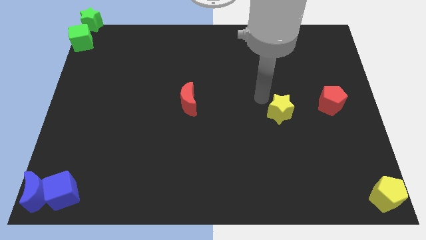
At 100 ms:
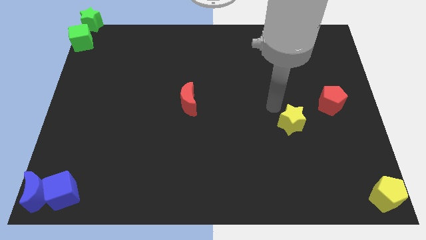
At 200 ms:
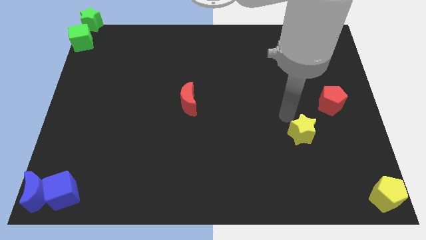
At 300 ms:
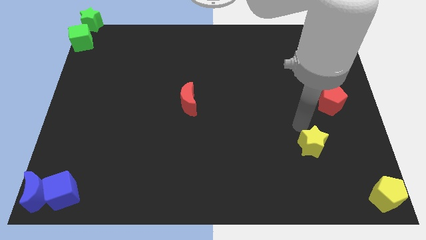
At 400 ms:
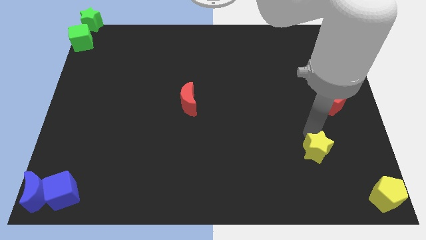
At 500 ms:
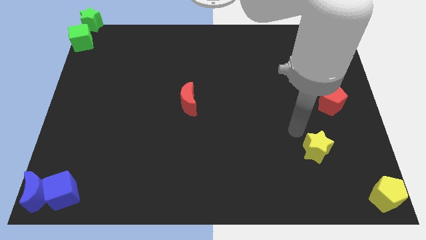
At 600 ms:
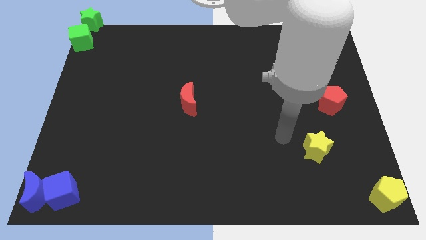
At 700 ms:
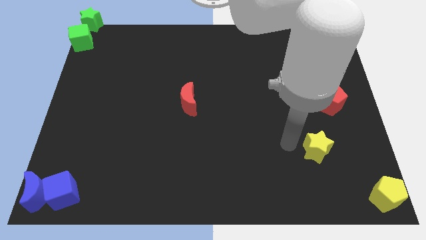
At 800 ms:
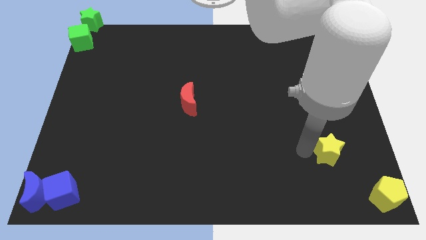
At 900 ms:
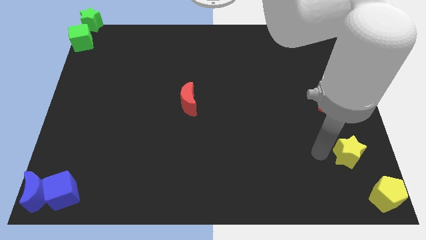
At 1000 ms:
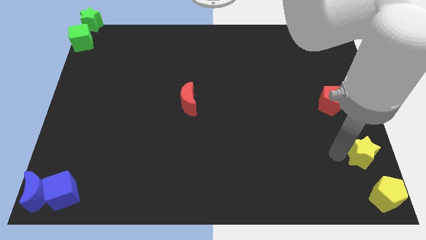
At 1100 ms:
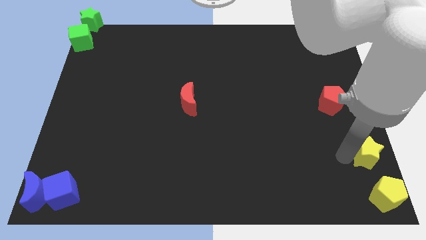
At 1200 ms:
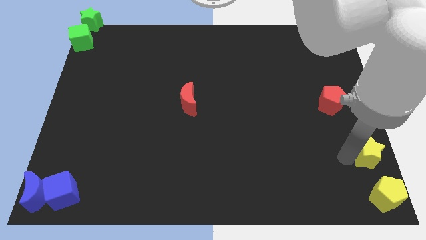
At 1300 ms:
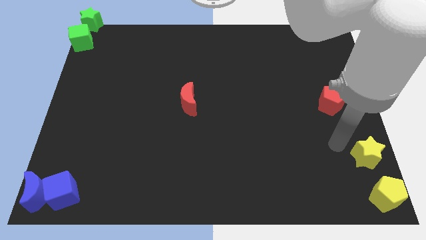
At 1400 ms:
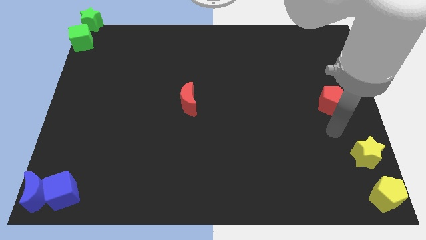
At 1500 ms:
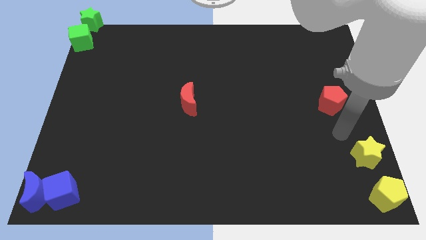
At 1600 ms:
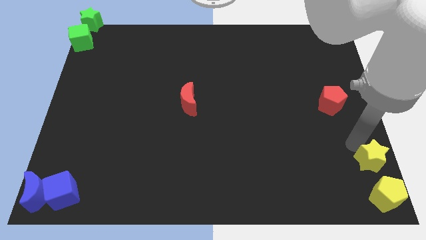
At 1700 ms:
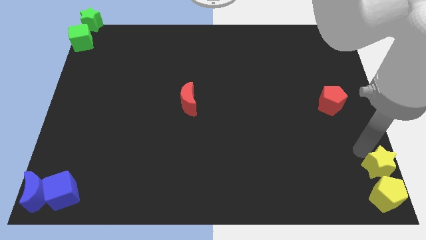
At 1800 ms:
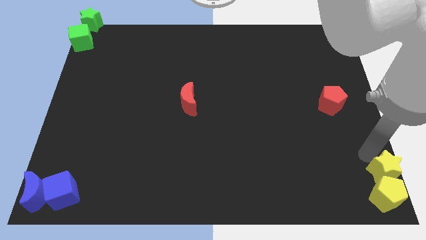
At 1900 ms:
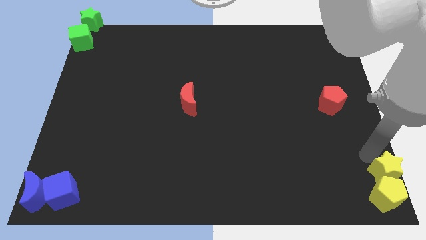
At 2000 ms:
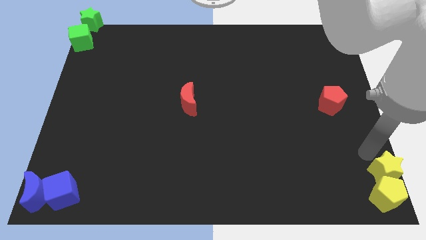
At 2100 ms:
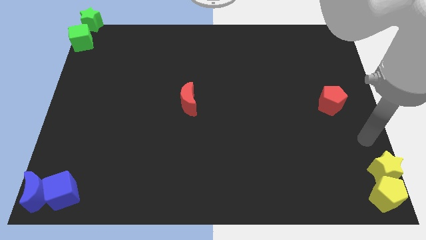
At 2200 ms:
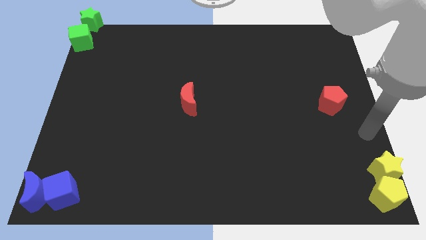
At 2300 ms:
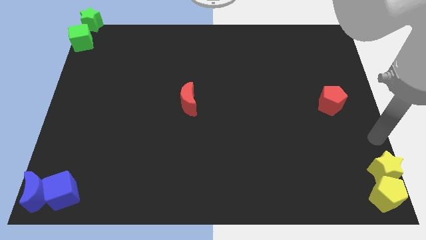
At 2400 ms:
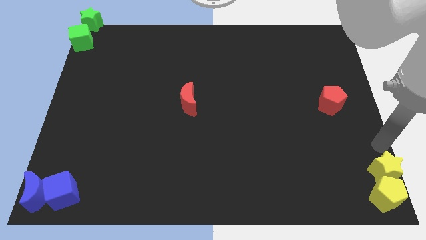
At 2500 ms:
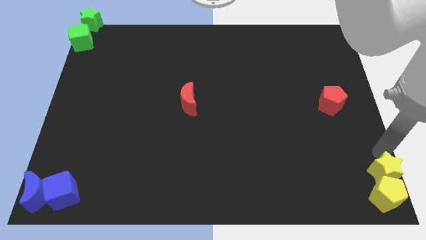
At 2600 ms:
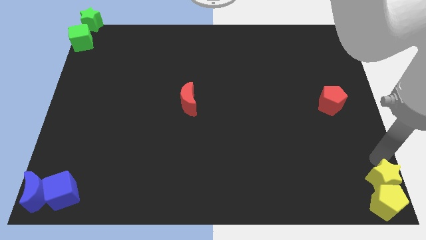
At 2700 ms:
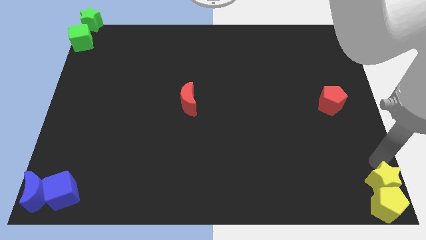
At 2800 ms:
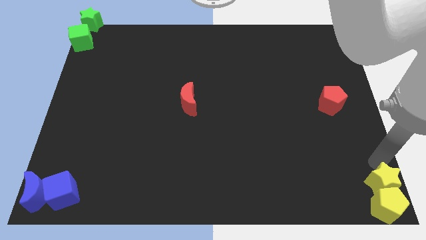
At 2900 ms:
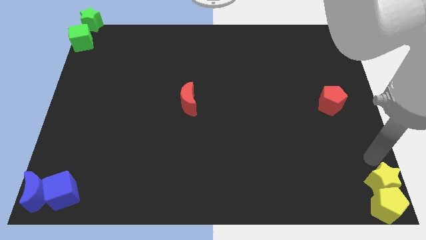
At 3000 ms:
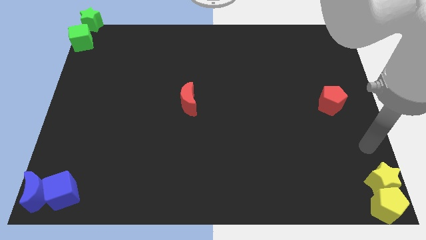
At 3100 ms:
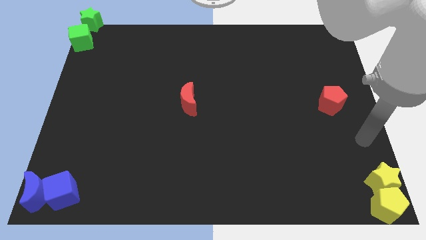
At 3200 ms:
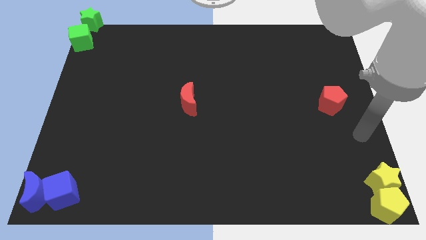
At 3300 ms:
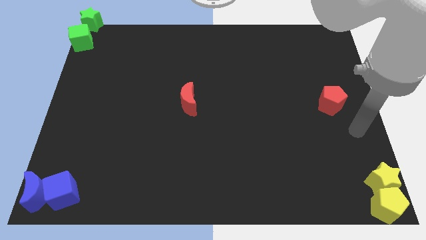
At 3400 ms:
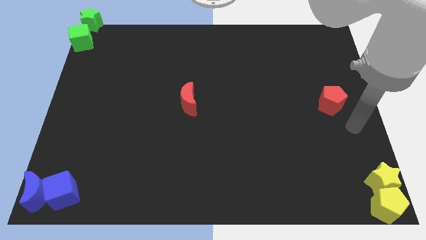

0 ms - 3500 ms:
push the yellow star to the top of the yellow pentagon

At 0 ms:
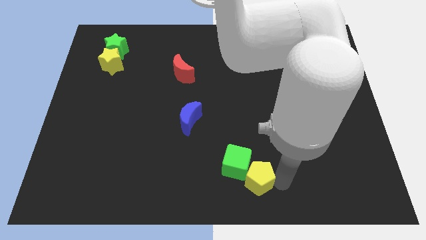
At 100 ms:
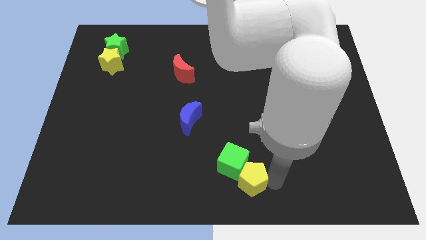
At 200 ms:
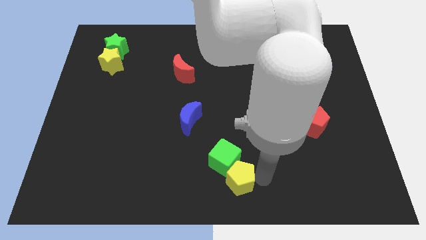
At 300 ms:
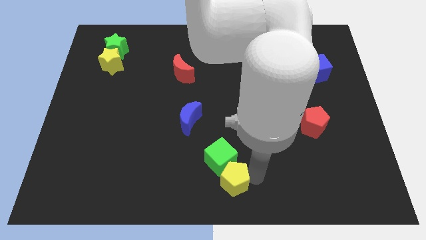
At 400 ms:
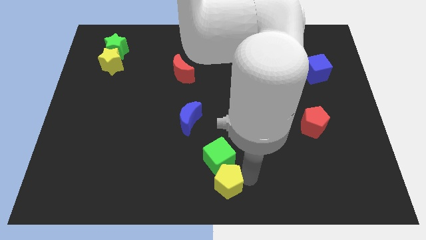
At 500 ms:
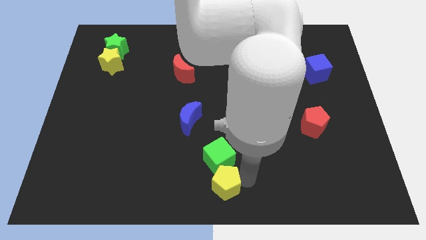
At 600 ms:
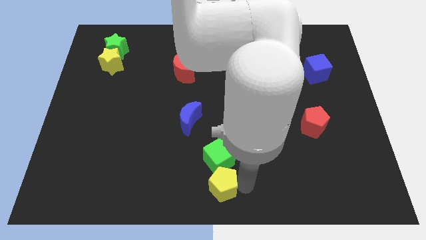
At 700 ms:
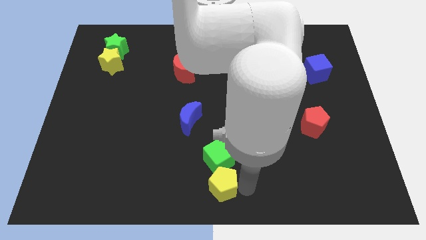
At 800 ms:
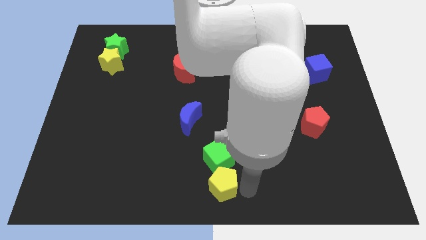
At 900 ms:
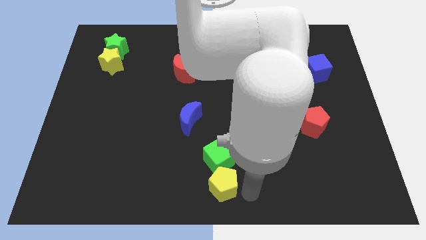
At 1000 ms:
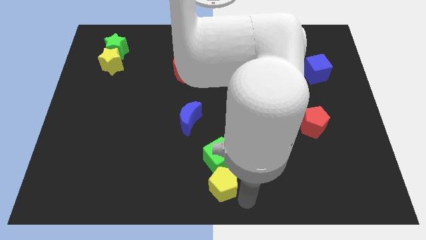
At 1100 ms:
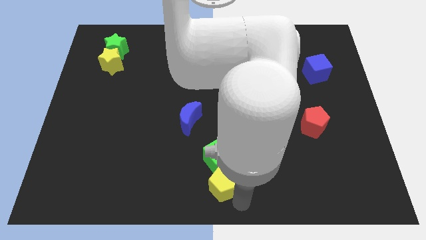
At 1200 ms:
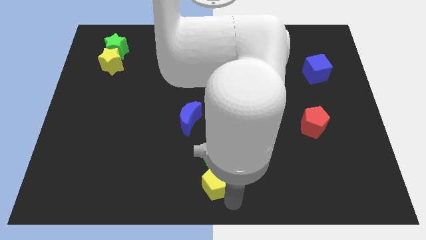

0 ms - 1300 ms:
place the yellow pentagon below the green cube

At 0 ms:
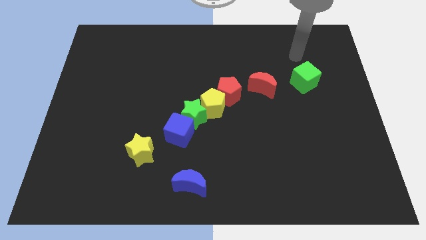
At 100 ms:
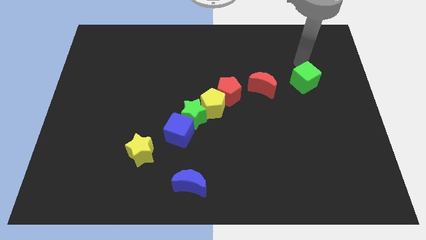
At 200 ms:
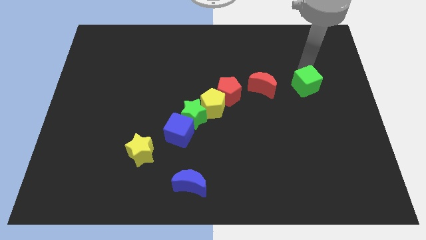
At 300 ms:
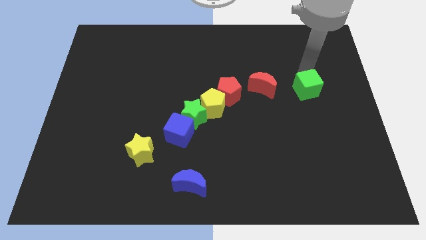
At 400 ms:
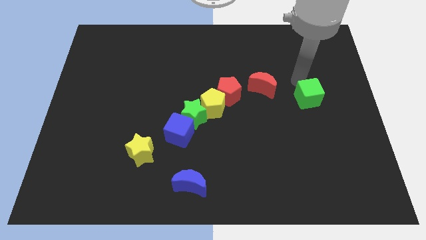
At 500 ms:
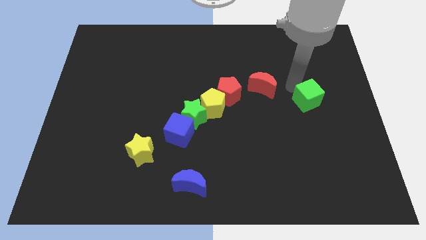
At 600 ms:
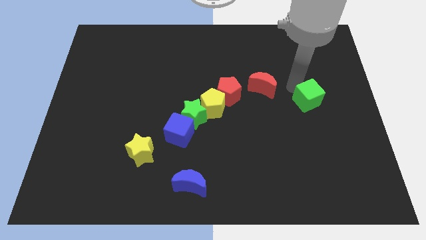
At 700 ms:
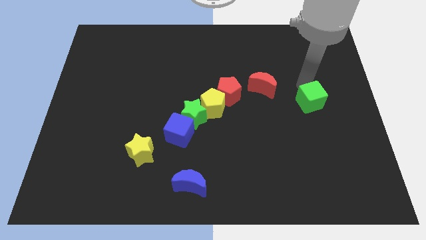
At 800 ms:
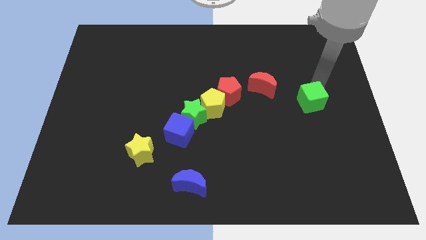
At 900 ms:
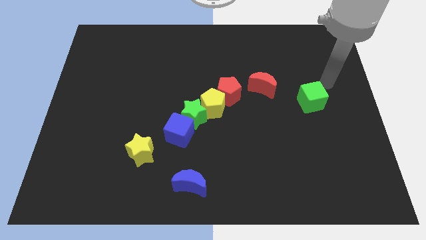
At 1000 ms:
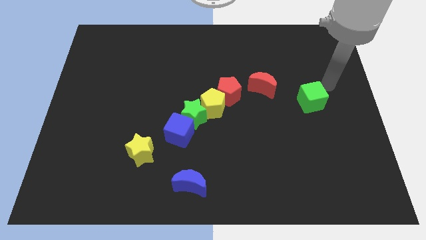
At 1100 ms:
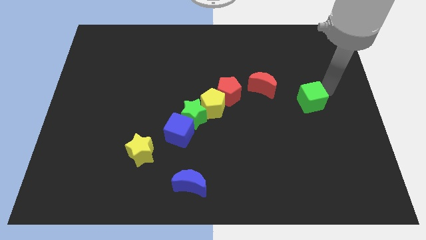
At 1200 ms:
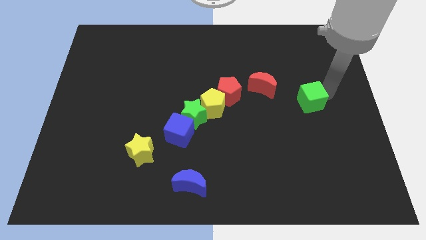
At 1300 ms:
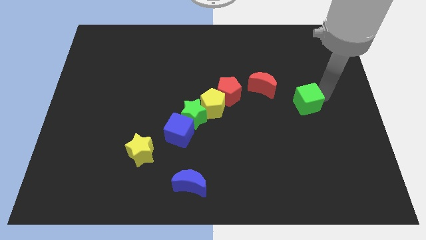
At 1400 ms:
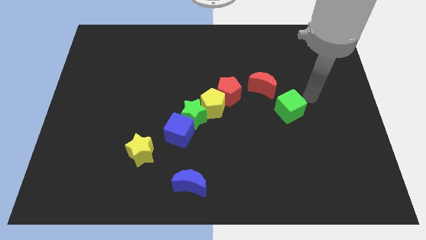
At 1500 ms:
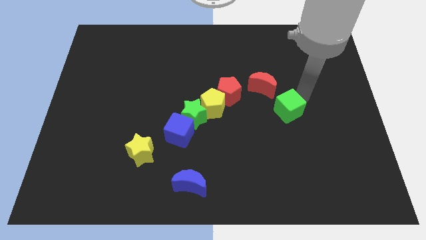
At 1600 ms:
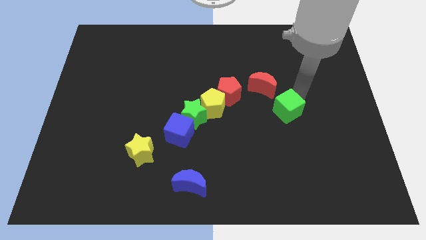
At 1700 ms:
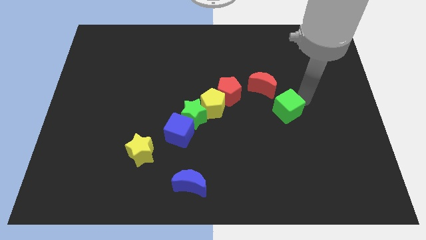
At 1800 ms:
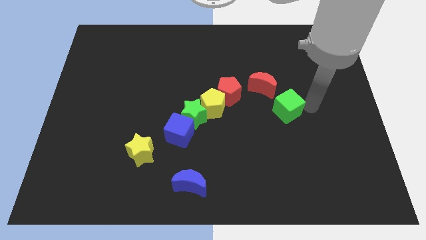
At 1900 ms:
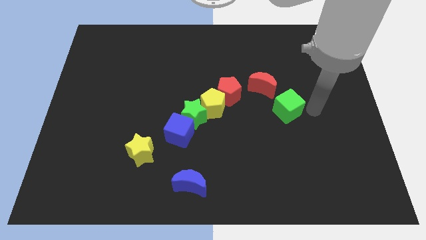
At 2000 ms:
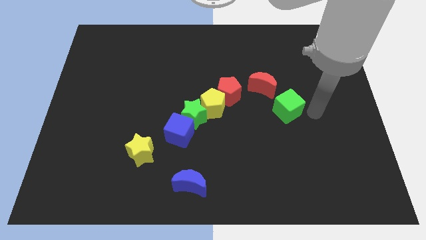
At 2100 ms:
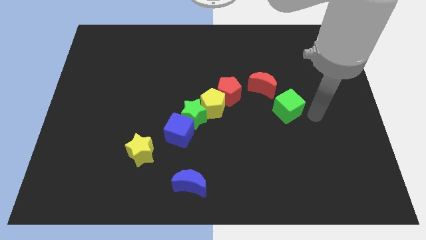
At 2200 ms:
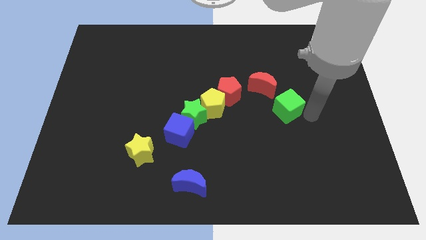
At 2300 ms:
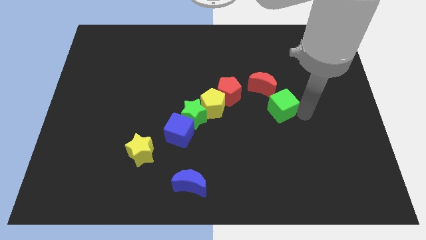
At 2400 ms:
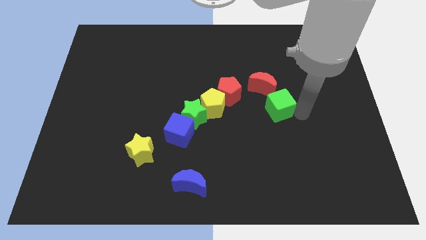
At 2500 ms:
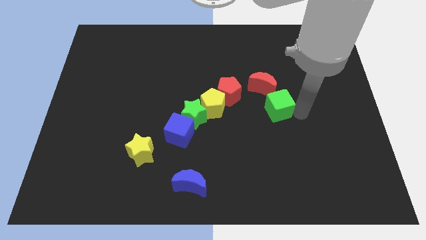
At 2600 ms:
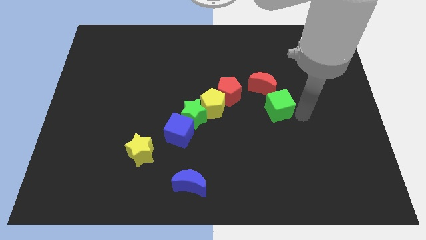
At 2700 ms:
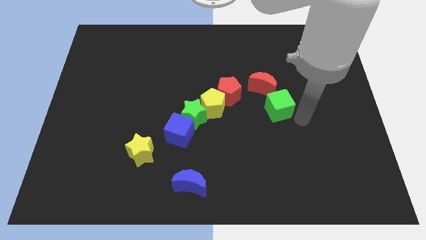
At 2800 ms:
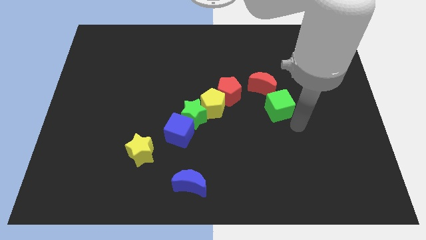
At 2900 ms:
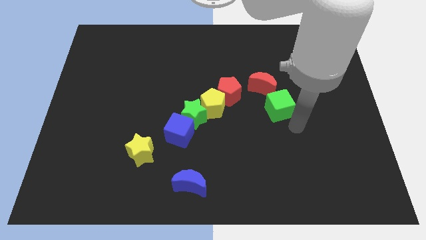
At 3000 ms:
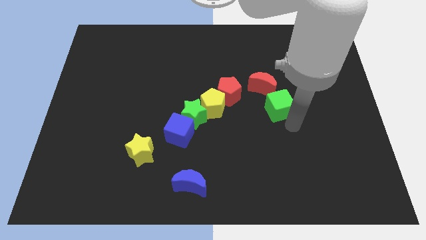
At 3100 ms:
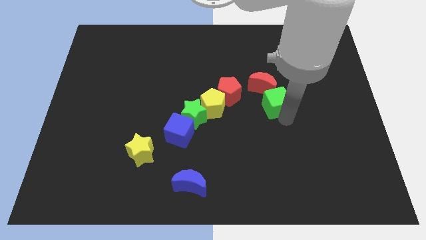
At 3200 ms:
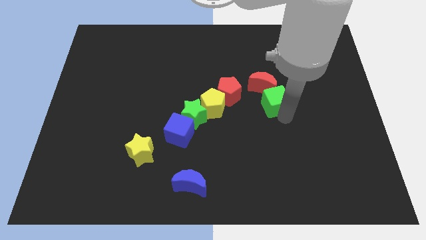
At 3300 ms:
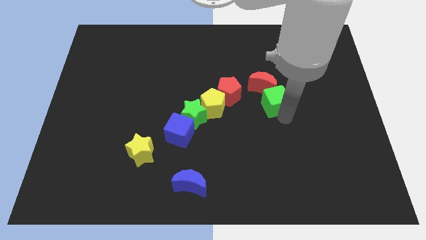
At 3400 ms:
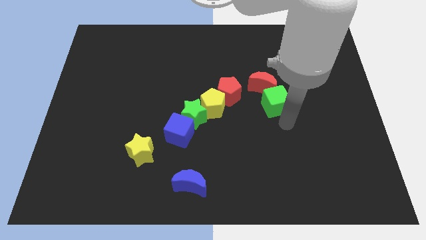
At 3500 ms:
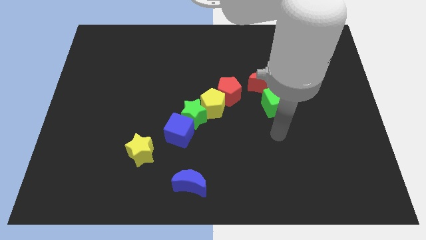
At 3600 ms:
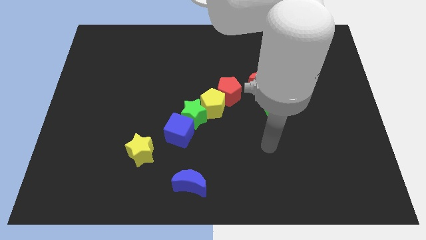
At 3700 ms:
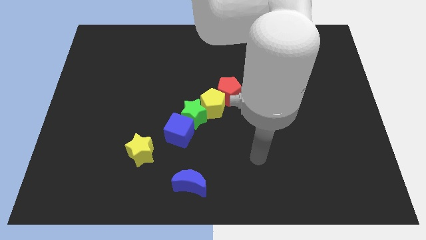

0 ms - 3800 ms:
move green cube to the bottom right of the red moon

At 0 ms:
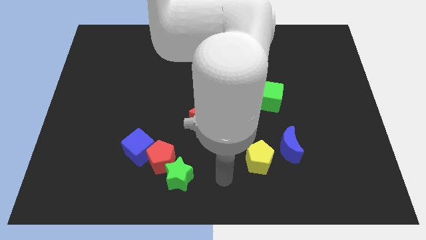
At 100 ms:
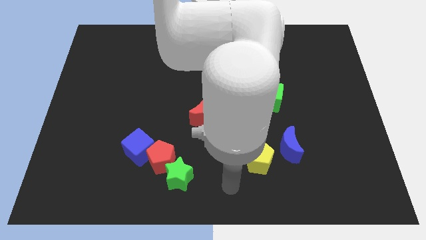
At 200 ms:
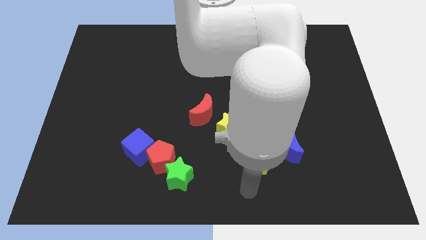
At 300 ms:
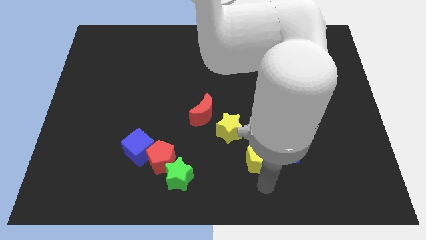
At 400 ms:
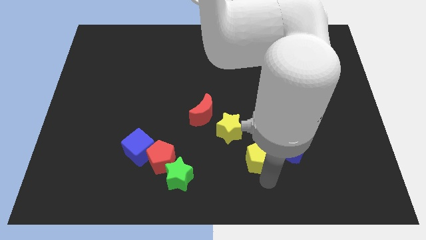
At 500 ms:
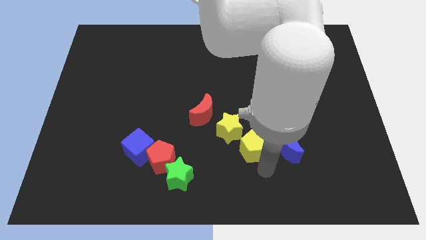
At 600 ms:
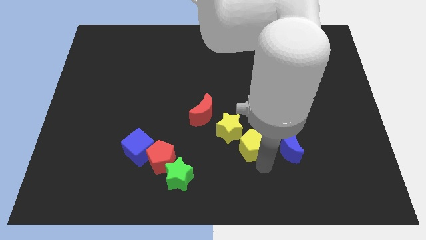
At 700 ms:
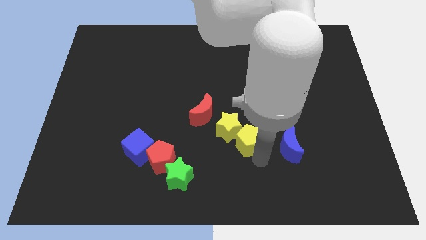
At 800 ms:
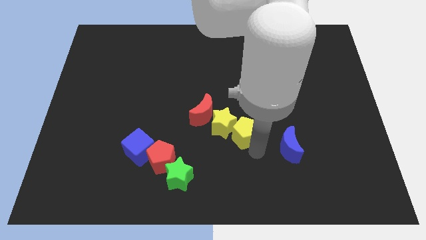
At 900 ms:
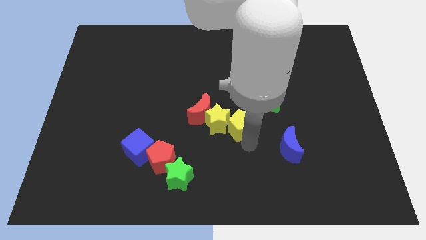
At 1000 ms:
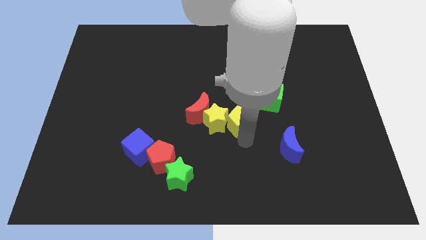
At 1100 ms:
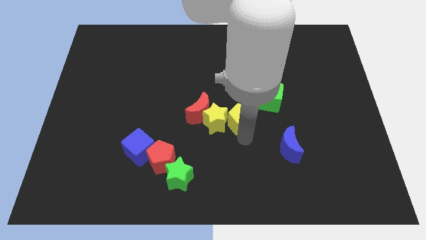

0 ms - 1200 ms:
move the yellow pentagon close to the yellow star